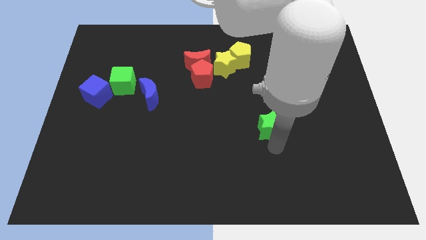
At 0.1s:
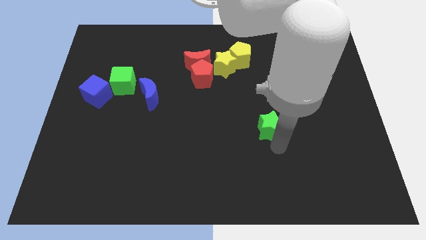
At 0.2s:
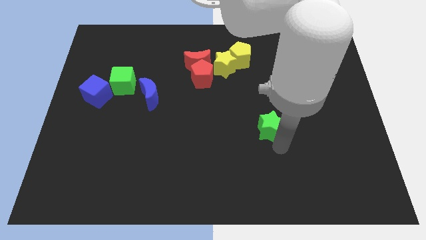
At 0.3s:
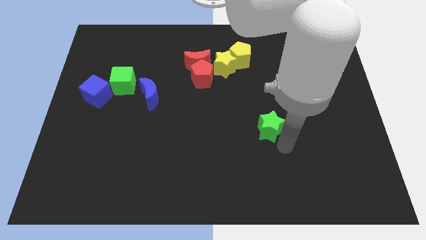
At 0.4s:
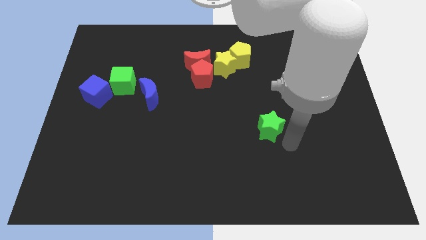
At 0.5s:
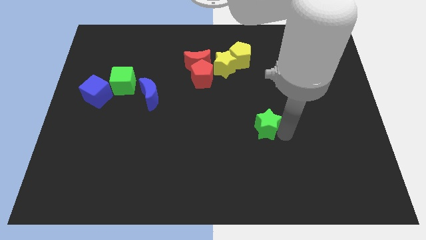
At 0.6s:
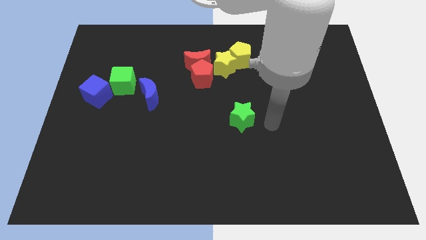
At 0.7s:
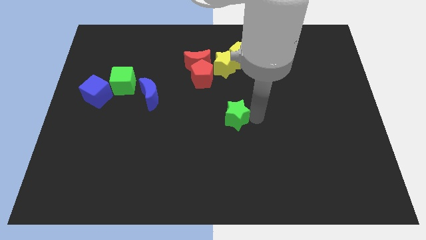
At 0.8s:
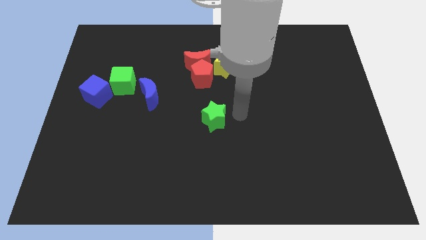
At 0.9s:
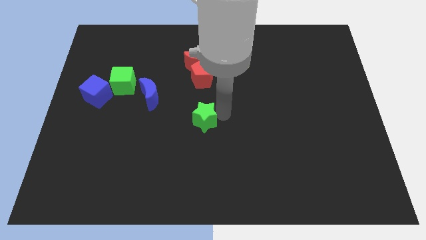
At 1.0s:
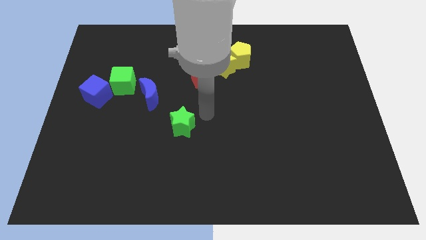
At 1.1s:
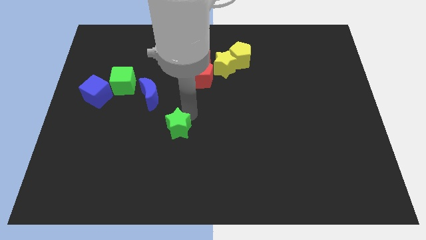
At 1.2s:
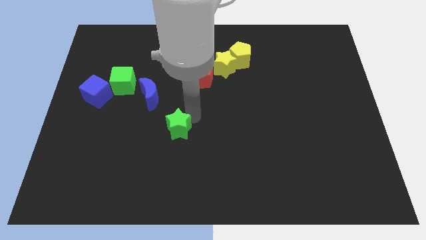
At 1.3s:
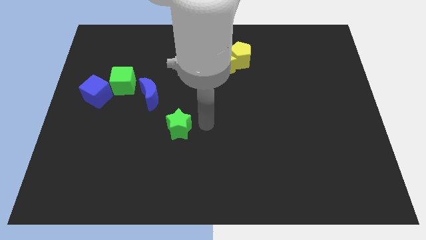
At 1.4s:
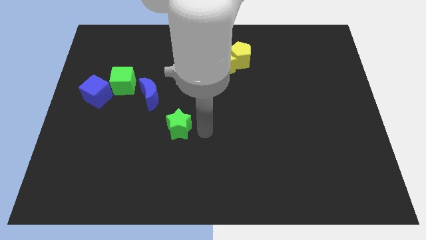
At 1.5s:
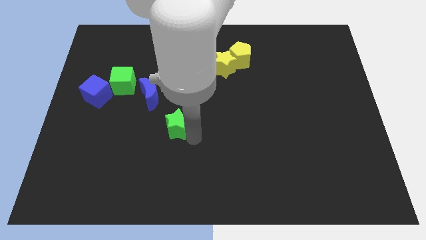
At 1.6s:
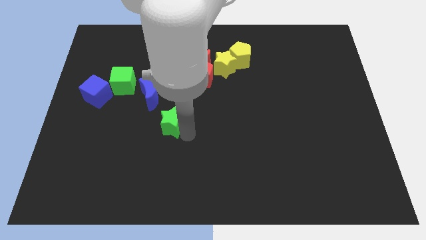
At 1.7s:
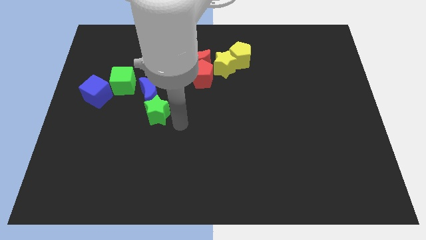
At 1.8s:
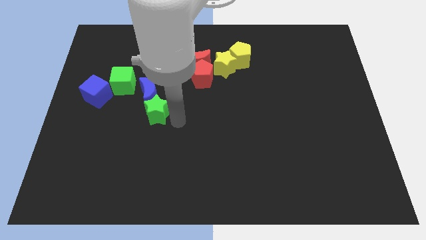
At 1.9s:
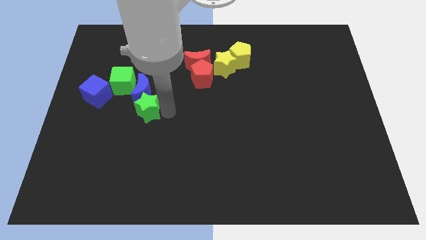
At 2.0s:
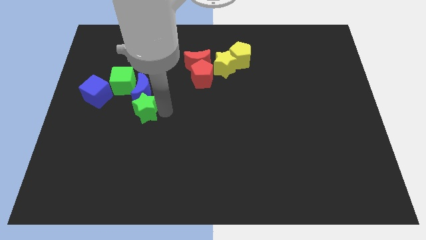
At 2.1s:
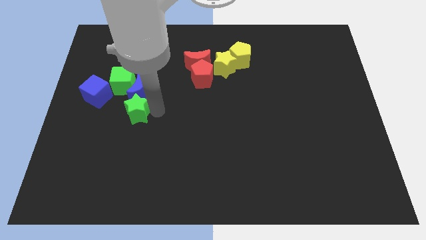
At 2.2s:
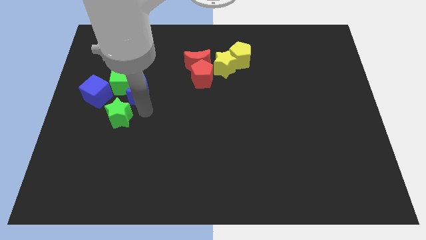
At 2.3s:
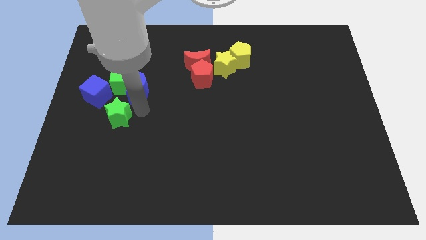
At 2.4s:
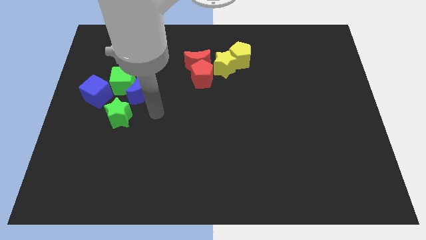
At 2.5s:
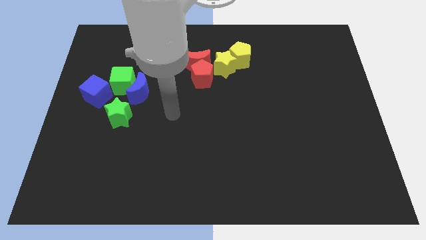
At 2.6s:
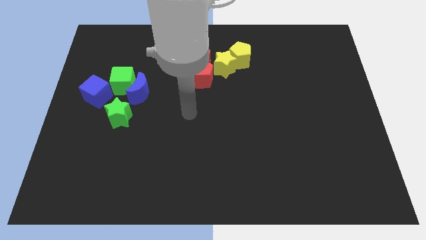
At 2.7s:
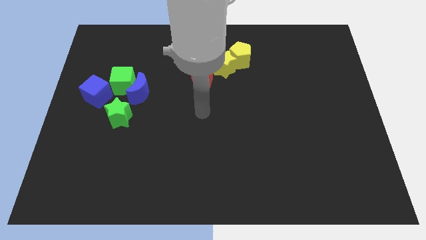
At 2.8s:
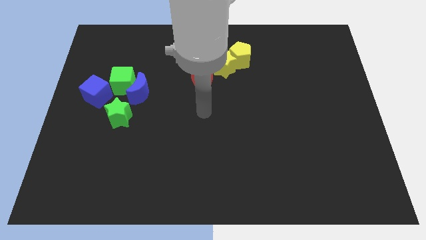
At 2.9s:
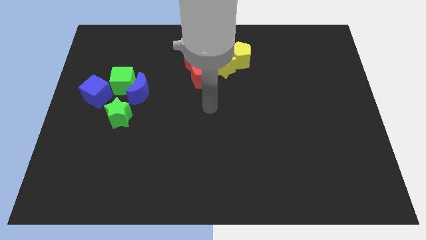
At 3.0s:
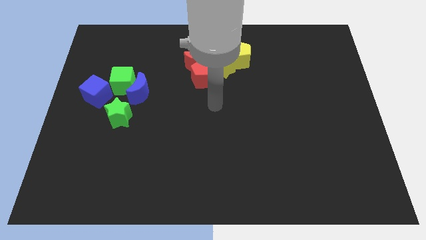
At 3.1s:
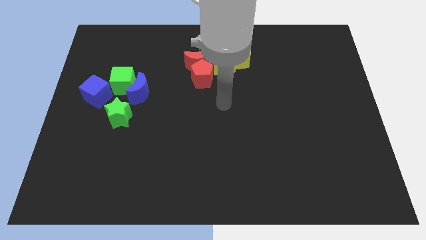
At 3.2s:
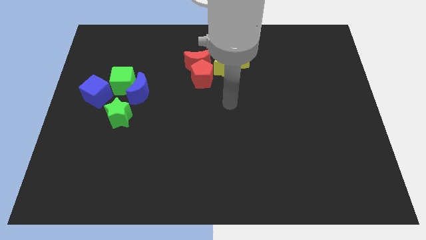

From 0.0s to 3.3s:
place the green star vertical to green cube

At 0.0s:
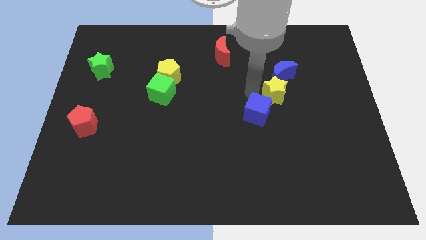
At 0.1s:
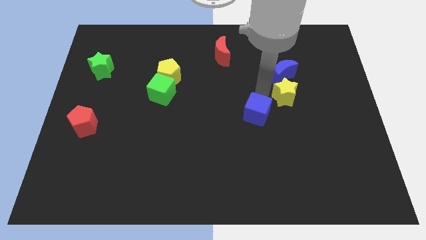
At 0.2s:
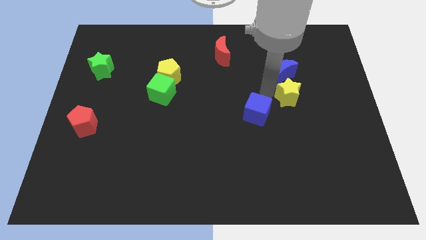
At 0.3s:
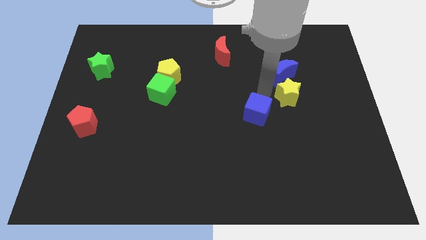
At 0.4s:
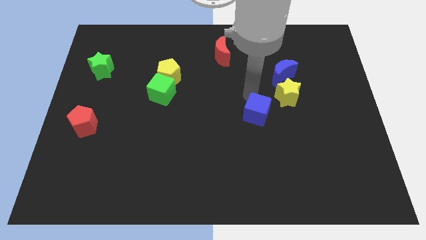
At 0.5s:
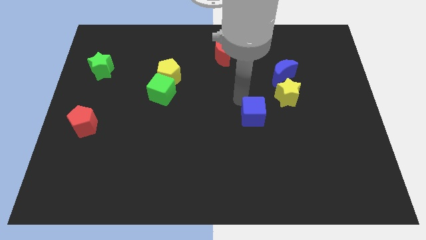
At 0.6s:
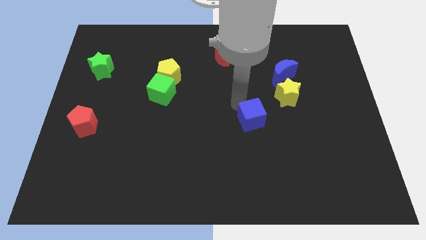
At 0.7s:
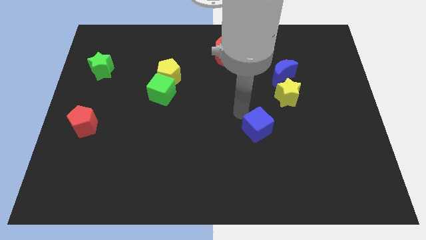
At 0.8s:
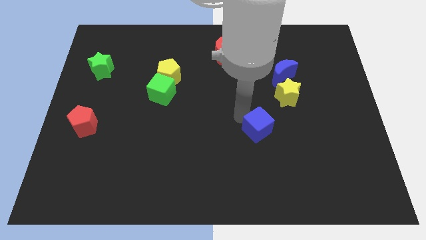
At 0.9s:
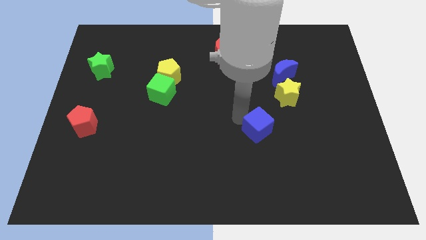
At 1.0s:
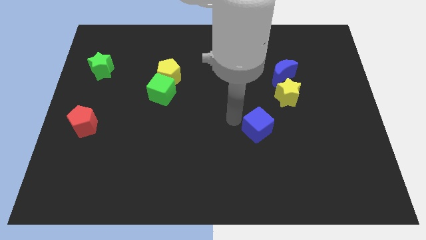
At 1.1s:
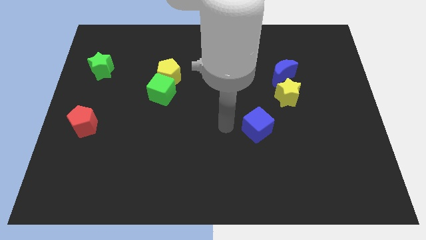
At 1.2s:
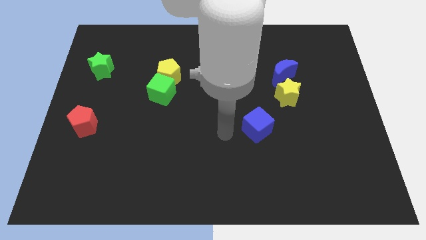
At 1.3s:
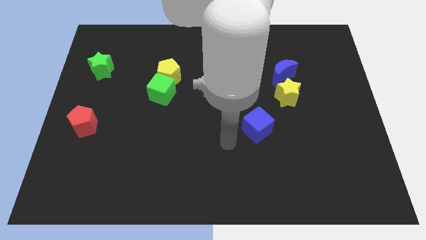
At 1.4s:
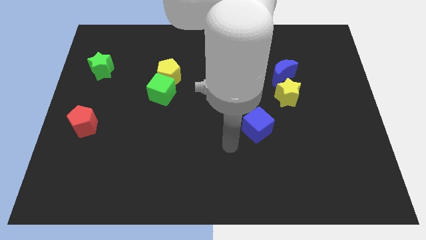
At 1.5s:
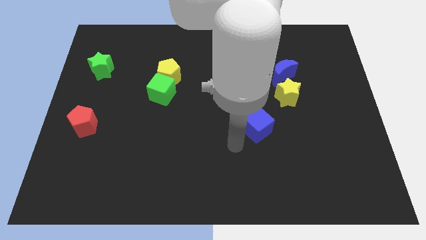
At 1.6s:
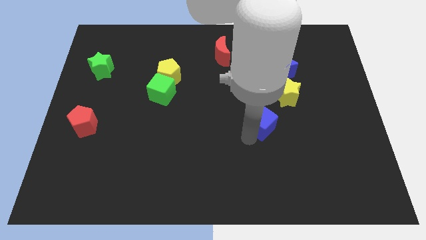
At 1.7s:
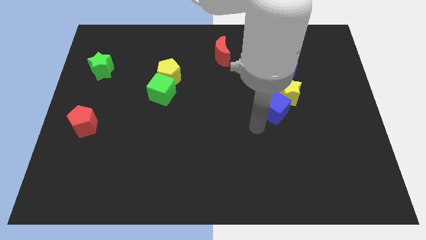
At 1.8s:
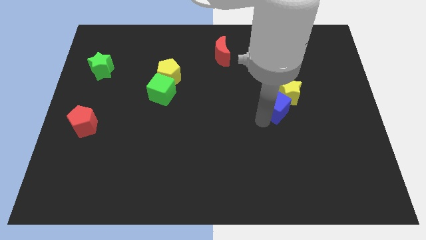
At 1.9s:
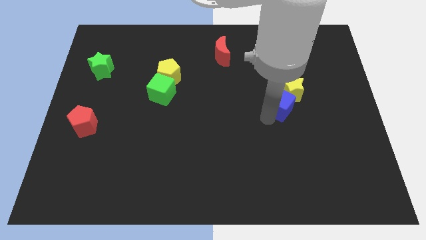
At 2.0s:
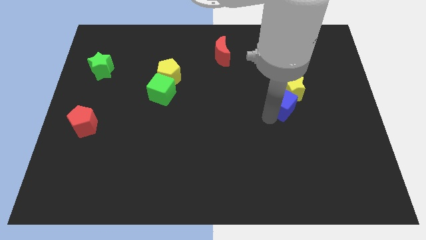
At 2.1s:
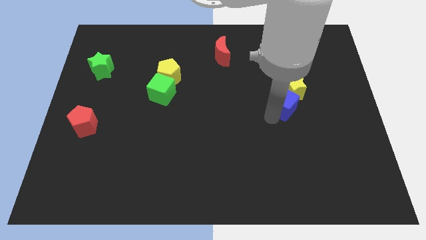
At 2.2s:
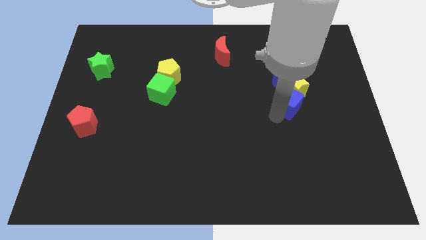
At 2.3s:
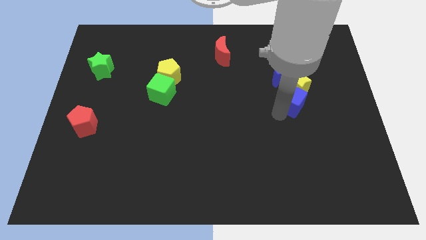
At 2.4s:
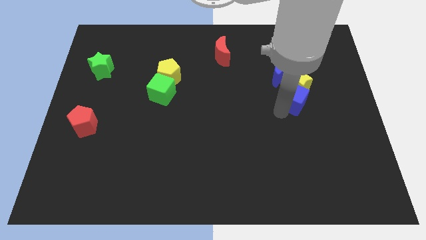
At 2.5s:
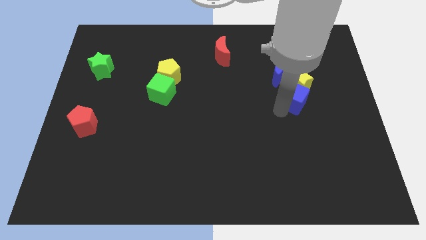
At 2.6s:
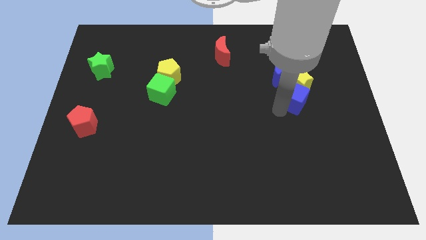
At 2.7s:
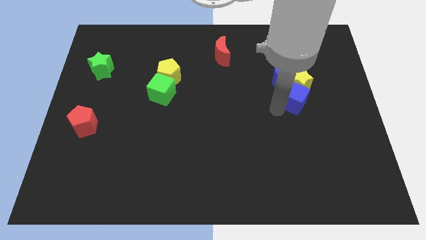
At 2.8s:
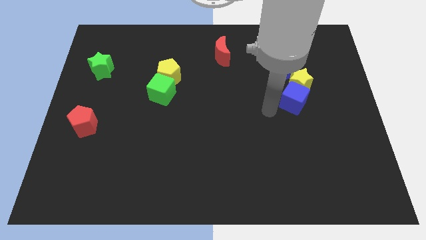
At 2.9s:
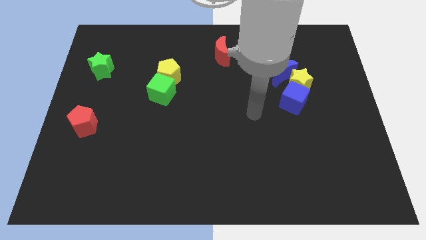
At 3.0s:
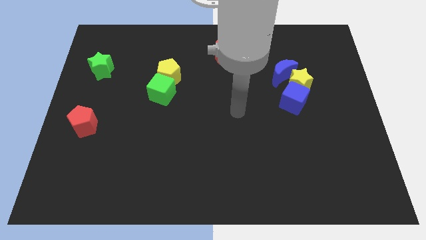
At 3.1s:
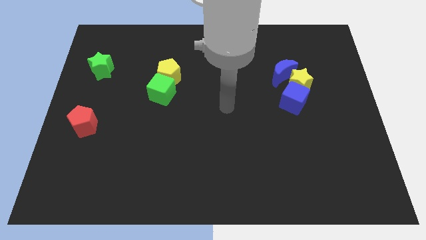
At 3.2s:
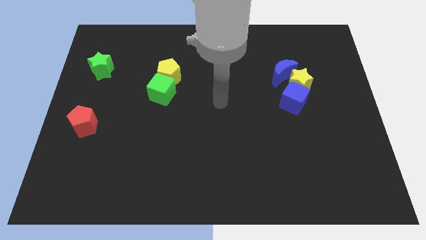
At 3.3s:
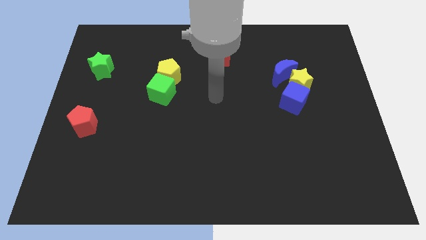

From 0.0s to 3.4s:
move the blue cube into the yellow star

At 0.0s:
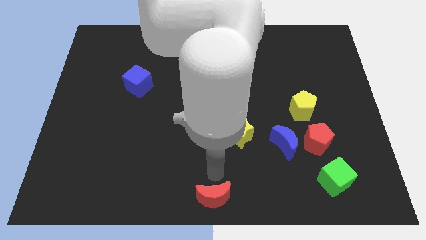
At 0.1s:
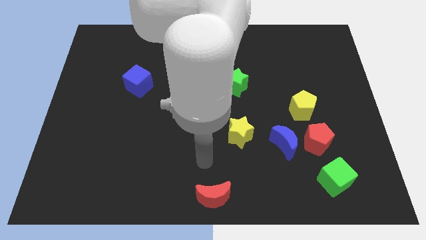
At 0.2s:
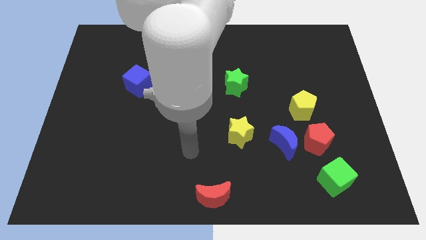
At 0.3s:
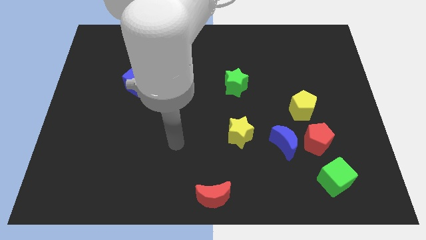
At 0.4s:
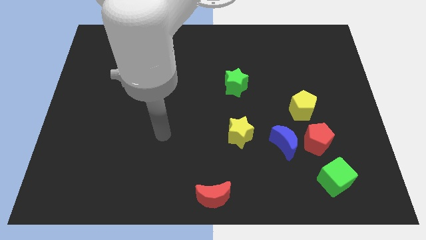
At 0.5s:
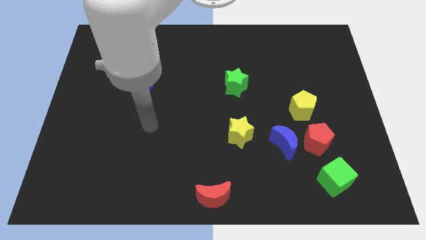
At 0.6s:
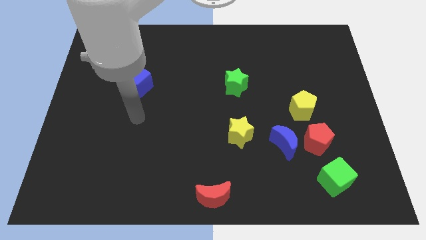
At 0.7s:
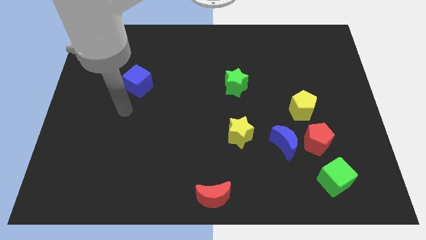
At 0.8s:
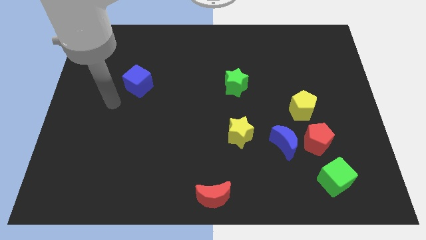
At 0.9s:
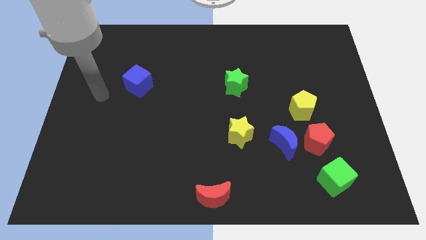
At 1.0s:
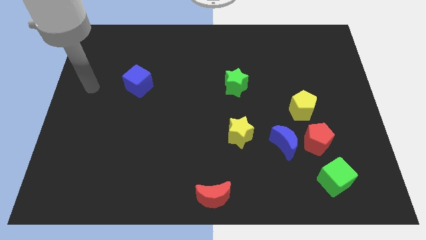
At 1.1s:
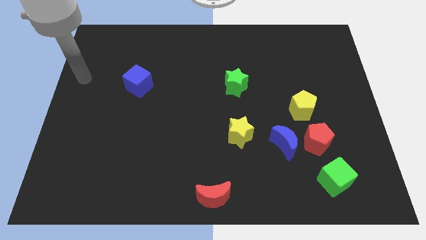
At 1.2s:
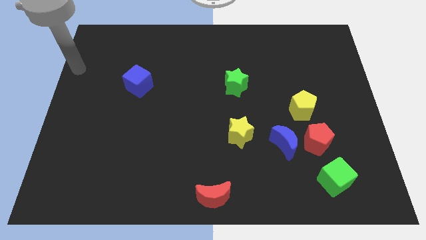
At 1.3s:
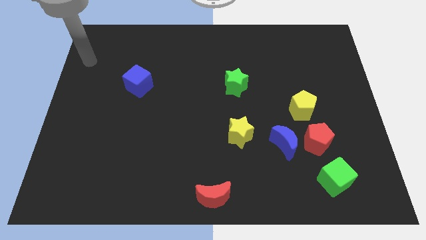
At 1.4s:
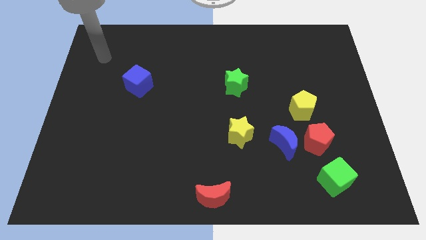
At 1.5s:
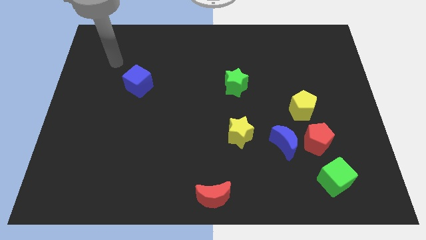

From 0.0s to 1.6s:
move your arm away from the red crecent

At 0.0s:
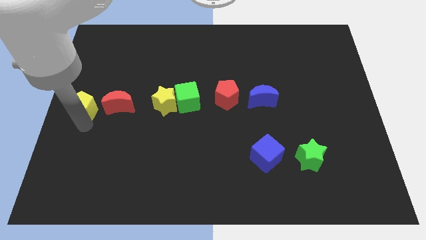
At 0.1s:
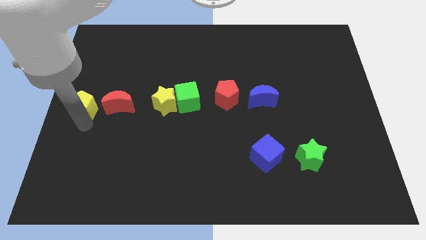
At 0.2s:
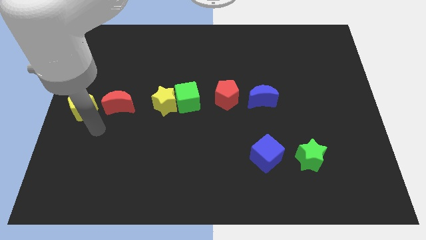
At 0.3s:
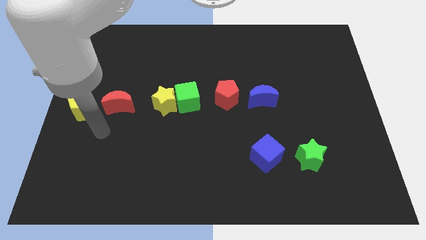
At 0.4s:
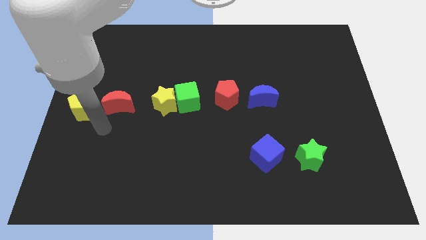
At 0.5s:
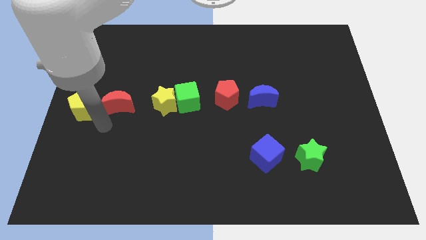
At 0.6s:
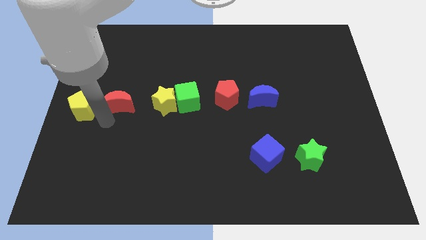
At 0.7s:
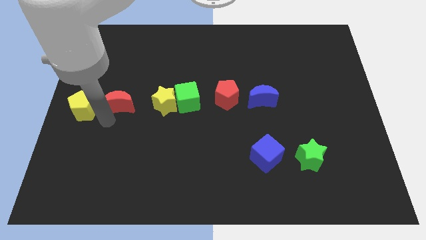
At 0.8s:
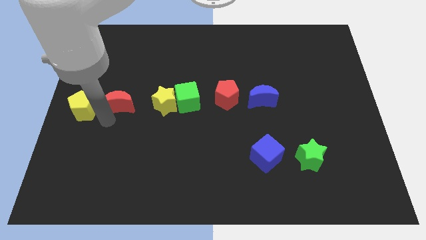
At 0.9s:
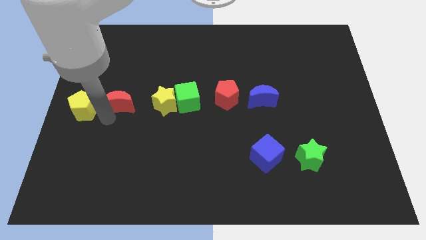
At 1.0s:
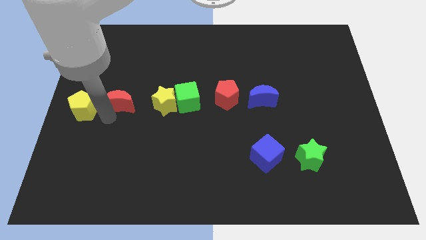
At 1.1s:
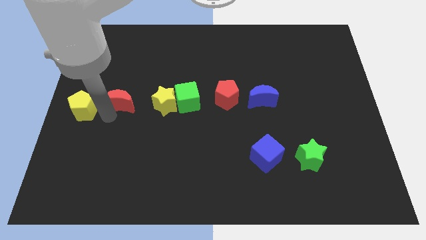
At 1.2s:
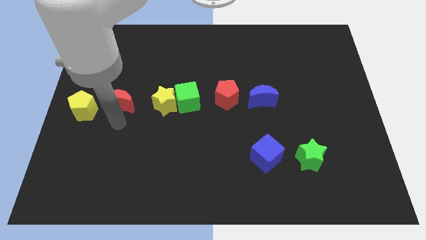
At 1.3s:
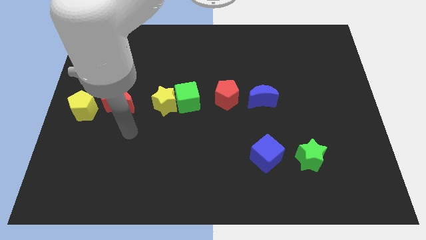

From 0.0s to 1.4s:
tap at the bottom left of the red moon
